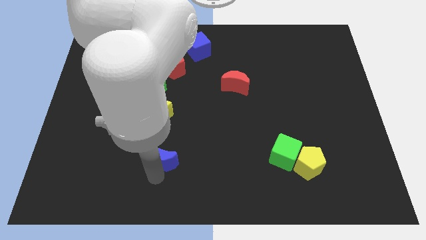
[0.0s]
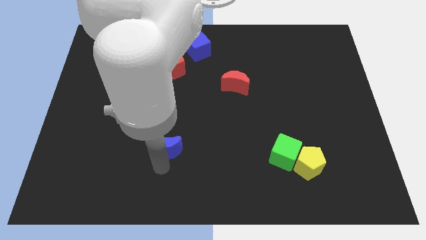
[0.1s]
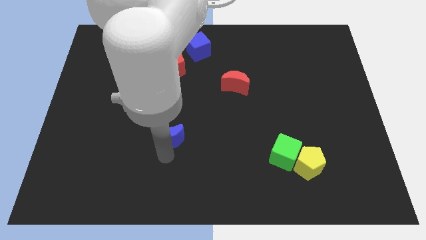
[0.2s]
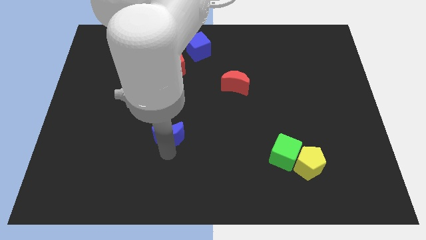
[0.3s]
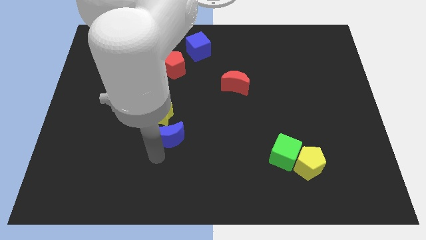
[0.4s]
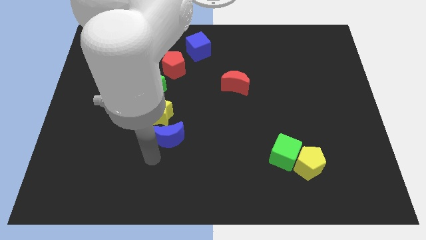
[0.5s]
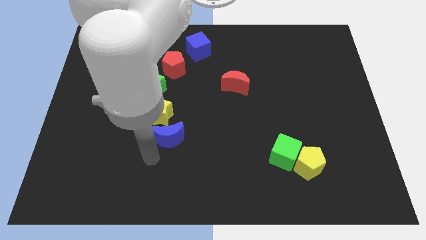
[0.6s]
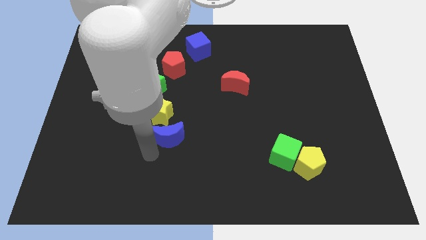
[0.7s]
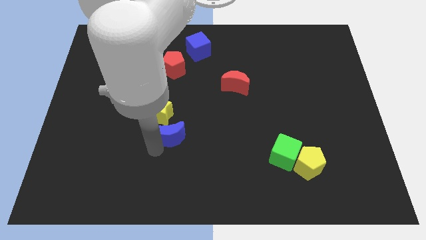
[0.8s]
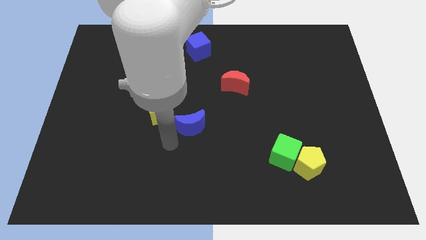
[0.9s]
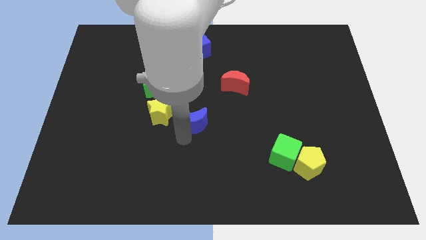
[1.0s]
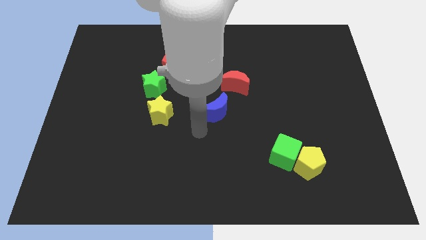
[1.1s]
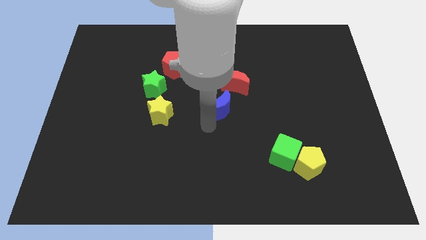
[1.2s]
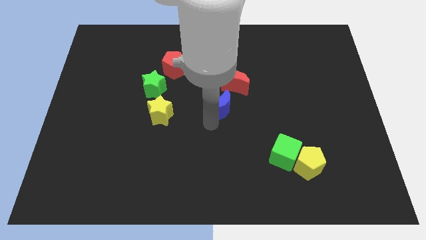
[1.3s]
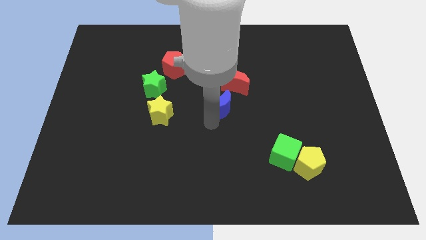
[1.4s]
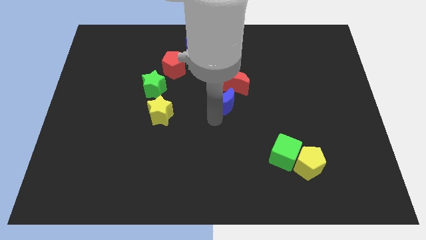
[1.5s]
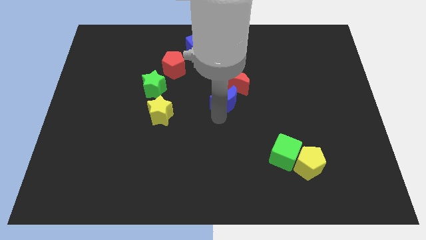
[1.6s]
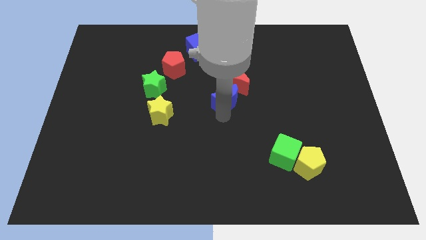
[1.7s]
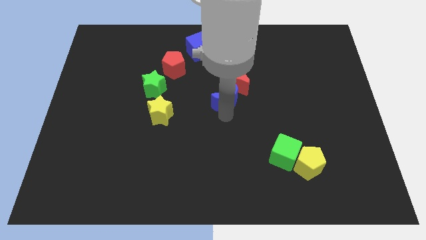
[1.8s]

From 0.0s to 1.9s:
push the blue crescent close to the red crescent

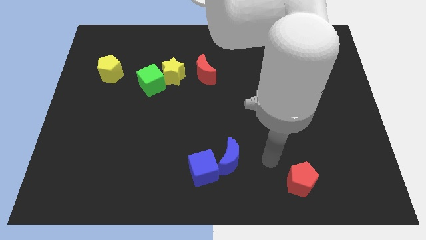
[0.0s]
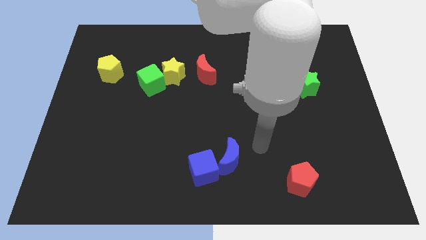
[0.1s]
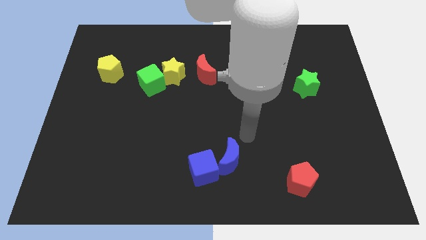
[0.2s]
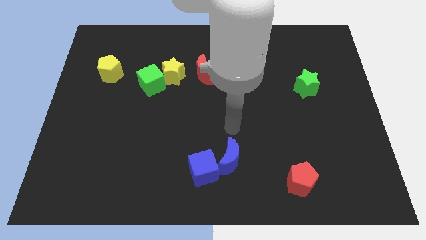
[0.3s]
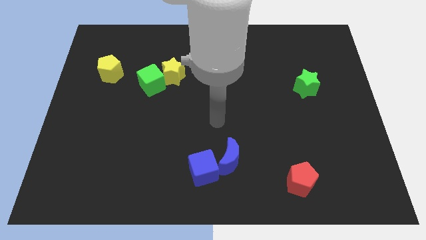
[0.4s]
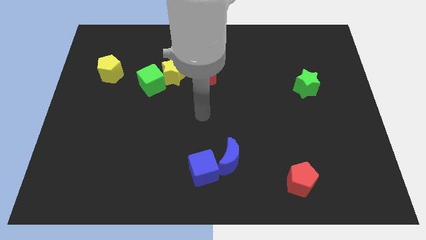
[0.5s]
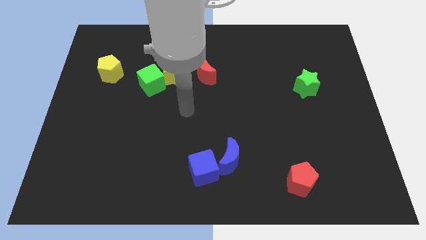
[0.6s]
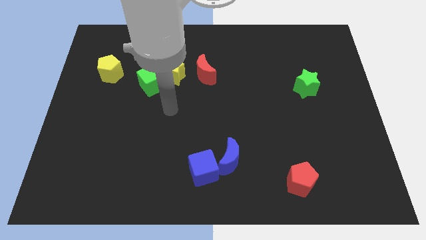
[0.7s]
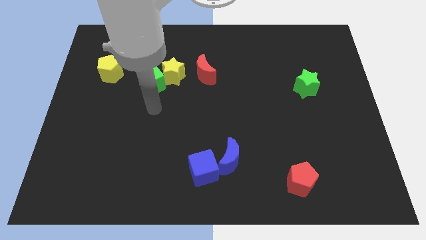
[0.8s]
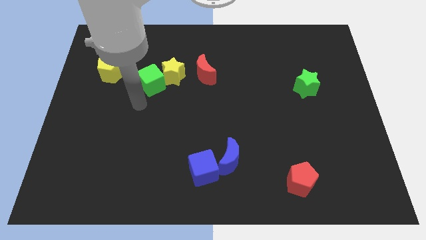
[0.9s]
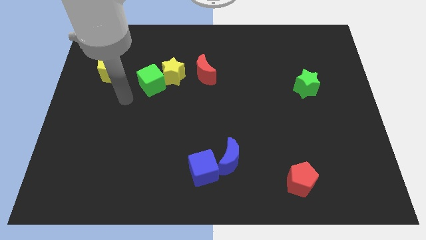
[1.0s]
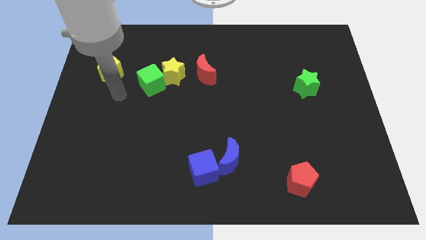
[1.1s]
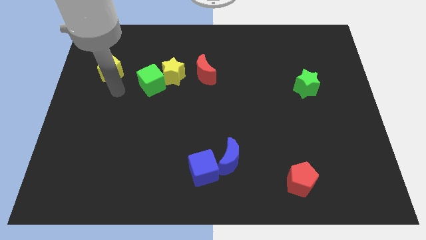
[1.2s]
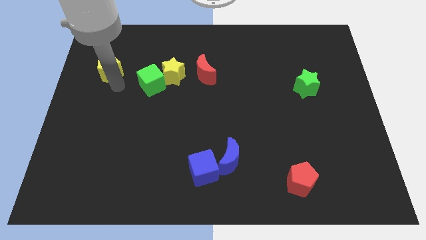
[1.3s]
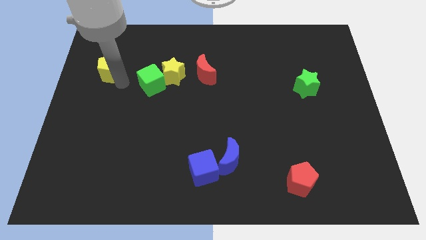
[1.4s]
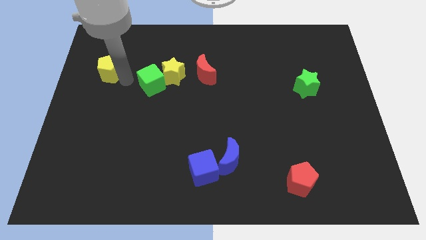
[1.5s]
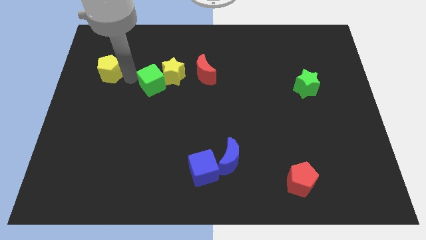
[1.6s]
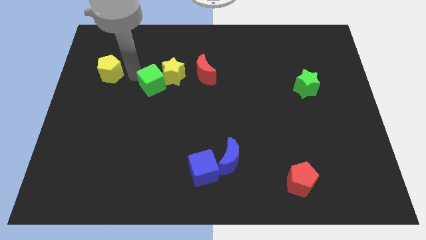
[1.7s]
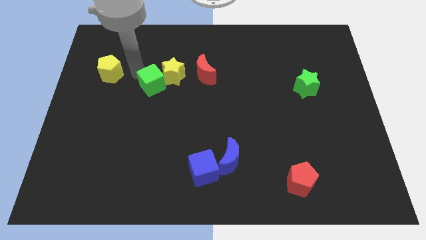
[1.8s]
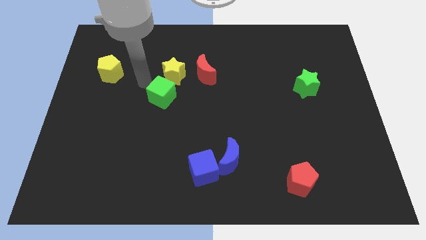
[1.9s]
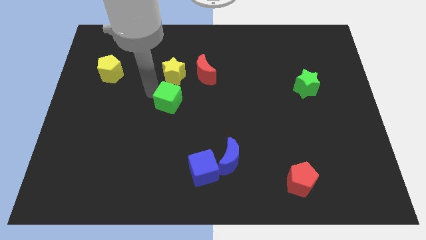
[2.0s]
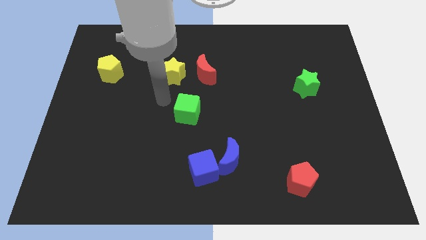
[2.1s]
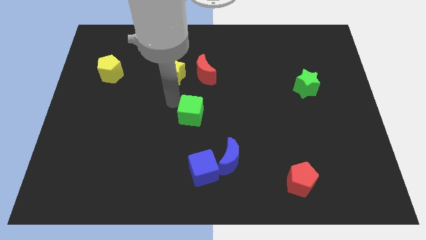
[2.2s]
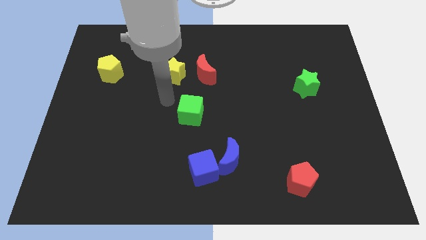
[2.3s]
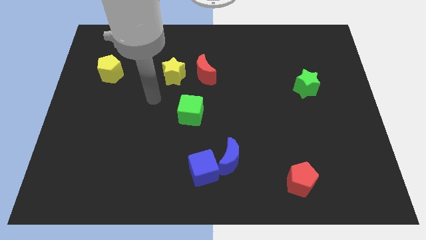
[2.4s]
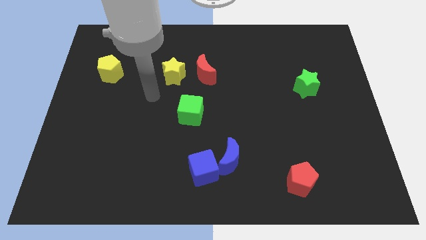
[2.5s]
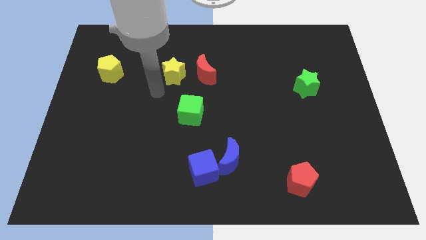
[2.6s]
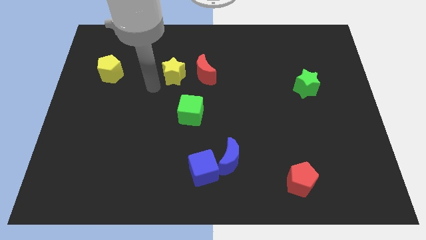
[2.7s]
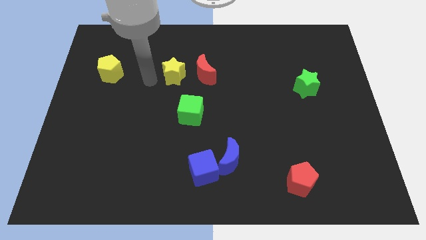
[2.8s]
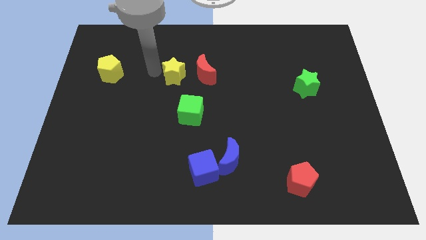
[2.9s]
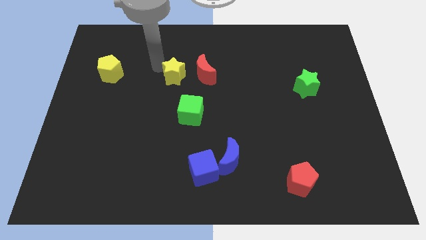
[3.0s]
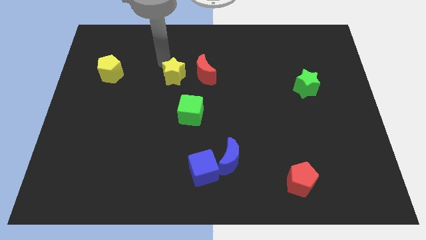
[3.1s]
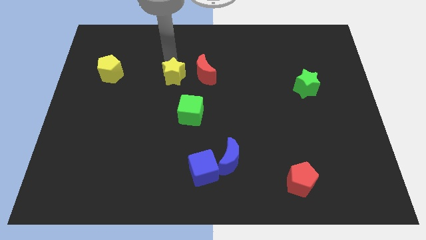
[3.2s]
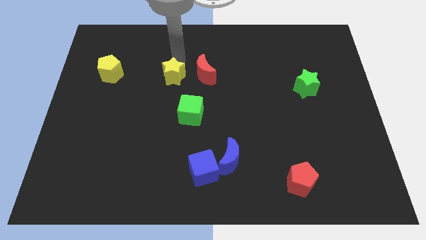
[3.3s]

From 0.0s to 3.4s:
place the green cube towards the center of the board

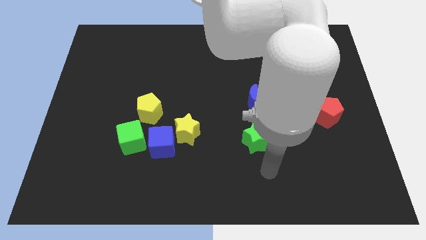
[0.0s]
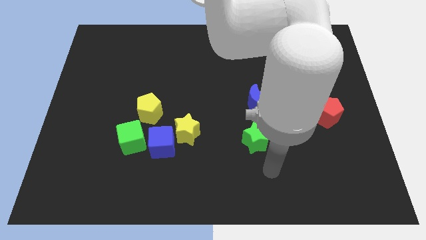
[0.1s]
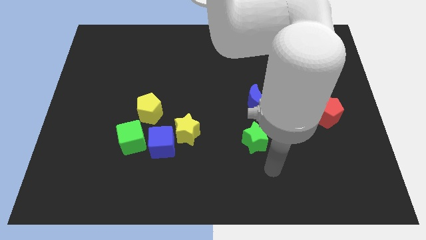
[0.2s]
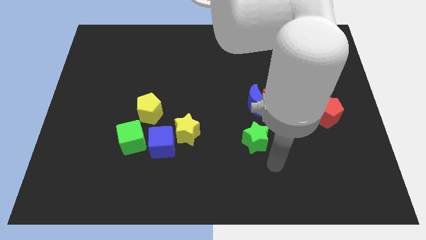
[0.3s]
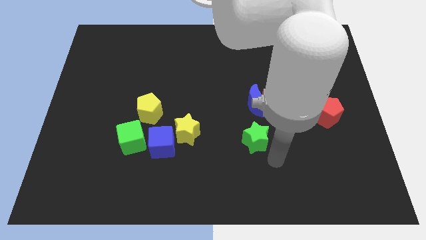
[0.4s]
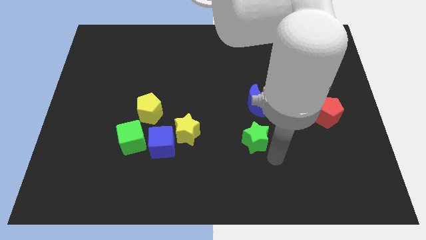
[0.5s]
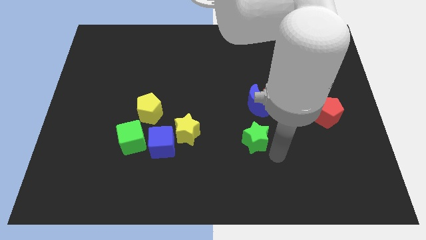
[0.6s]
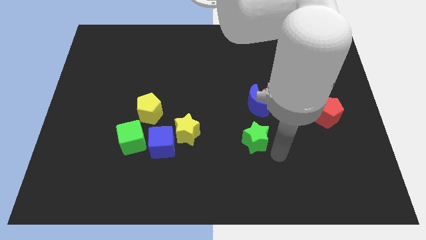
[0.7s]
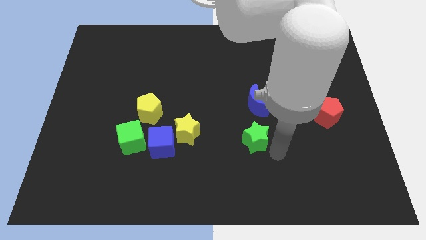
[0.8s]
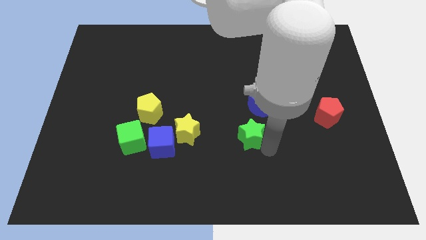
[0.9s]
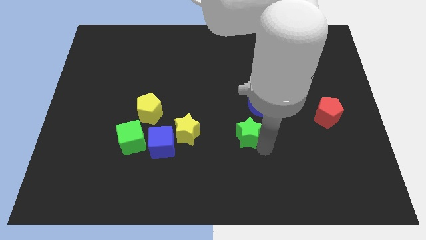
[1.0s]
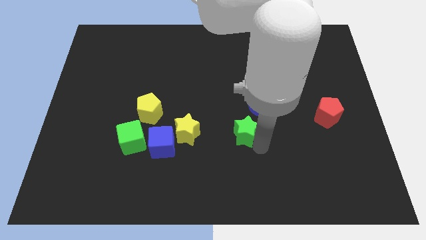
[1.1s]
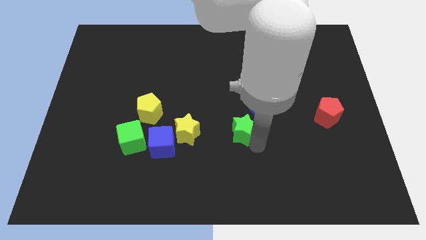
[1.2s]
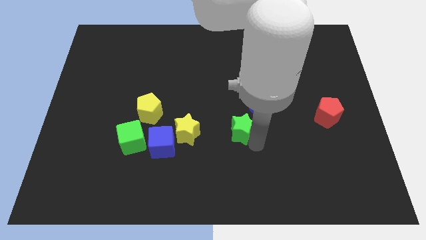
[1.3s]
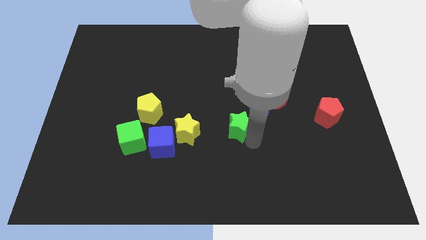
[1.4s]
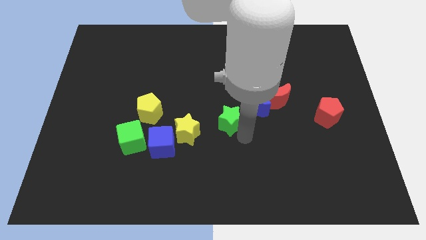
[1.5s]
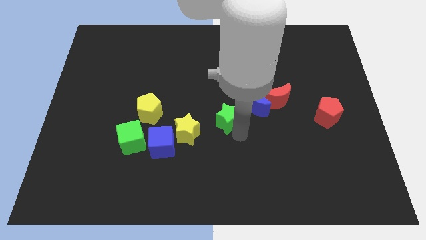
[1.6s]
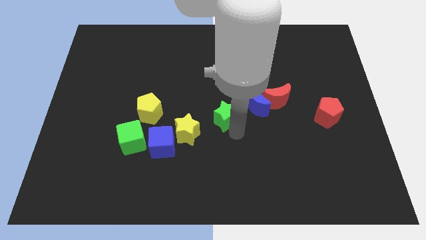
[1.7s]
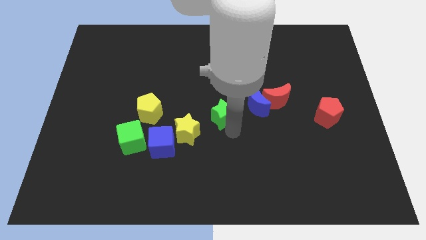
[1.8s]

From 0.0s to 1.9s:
place the green star in between the yellow star and blue moon

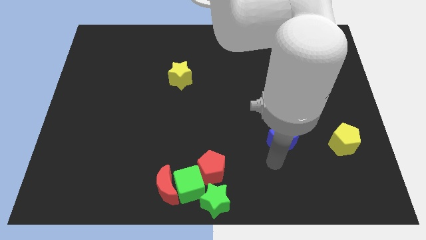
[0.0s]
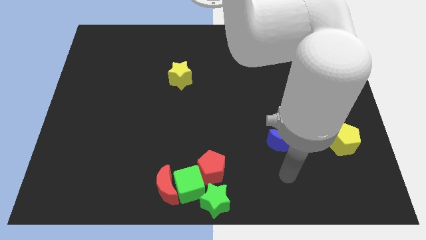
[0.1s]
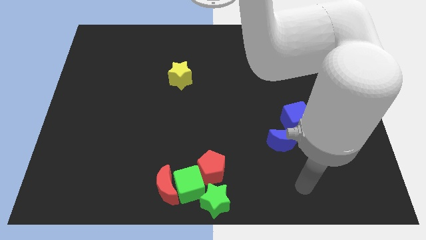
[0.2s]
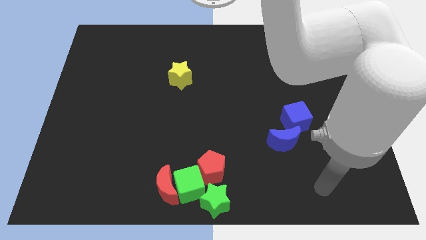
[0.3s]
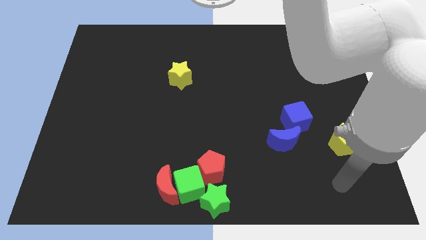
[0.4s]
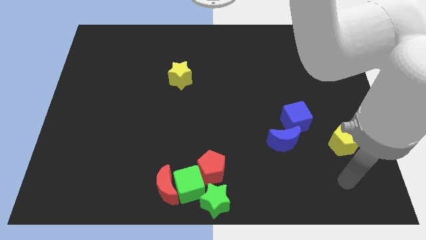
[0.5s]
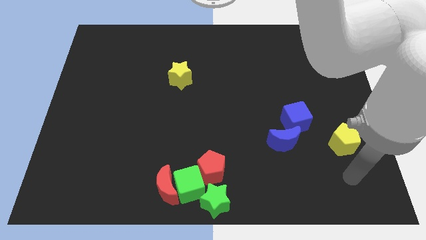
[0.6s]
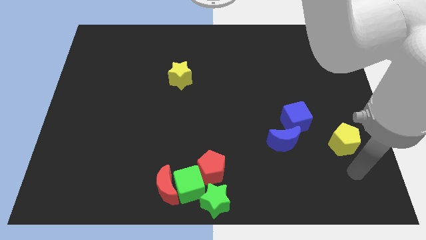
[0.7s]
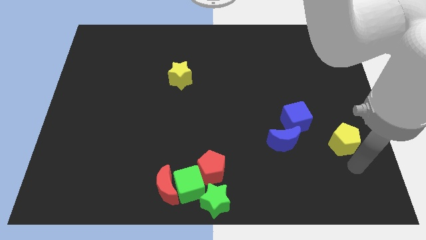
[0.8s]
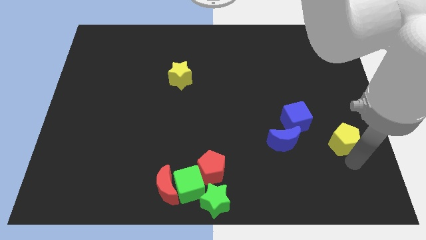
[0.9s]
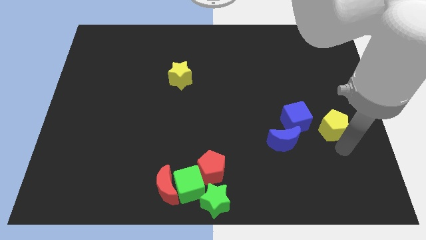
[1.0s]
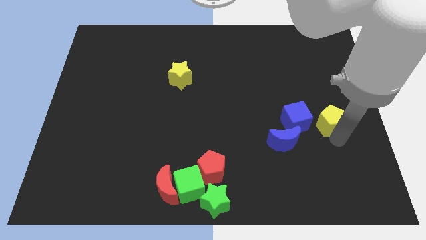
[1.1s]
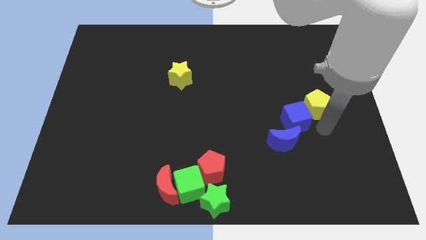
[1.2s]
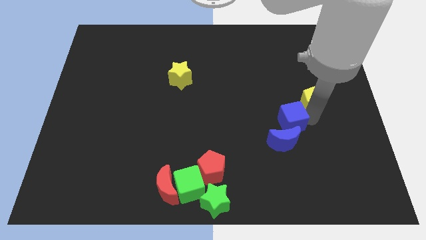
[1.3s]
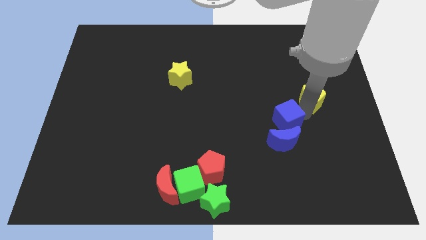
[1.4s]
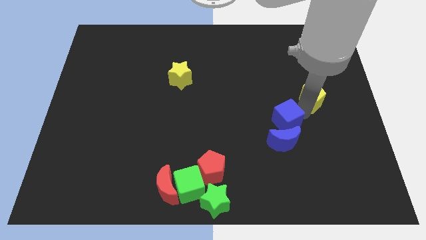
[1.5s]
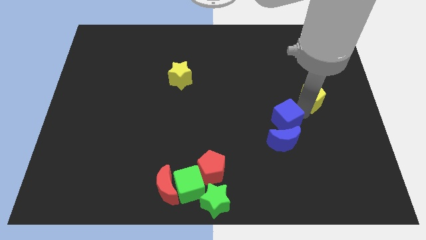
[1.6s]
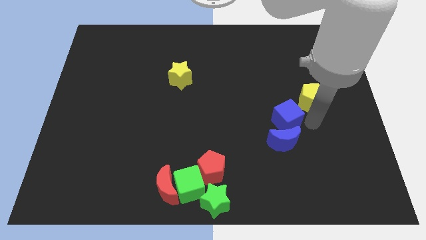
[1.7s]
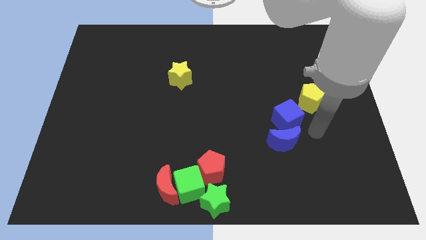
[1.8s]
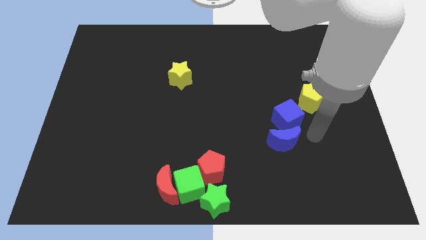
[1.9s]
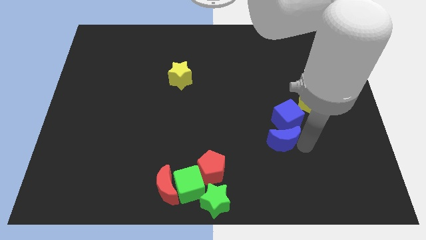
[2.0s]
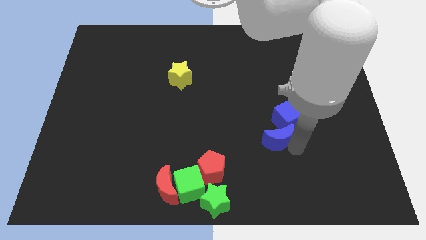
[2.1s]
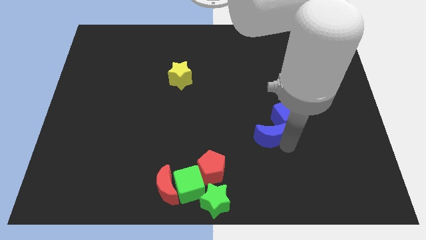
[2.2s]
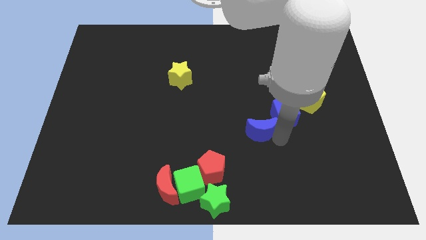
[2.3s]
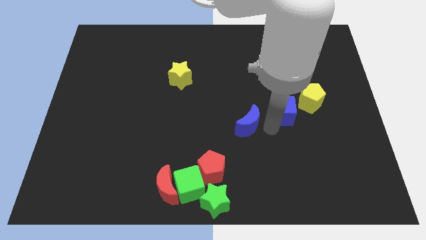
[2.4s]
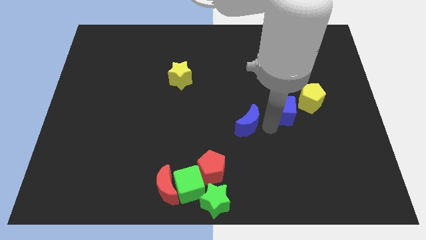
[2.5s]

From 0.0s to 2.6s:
make a diagonal line with the yellow pentagon blue cube and blue crescent
